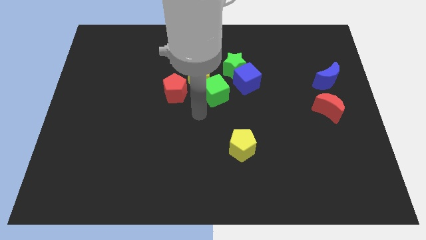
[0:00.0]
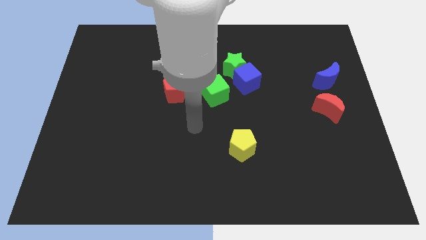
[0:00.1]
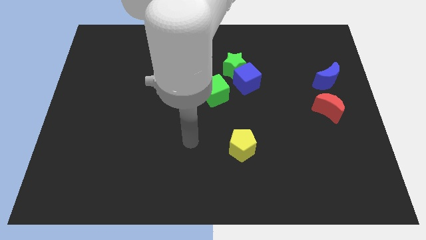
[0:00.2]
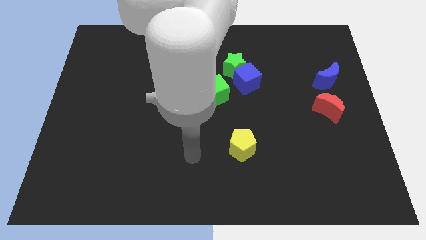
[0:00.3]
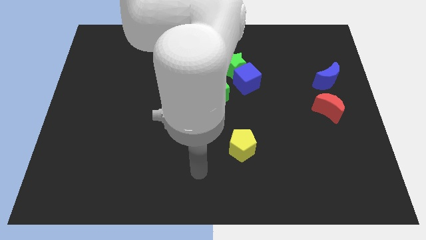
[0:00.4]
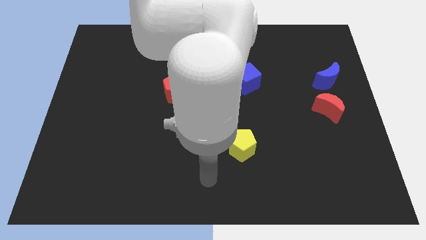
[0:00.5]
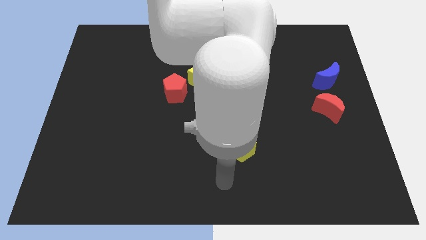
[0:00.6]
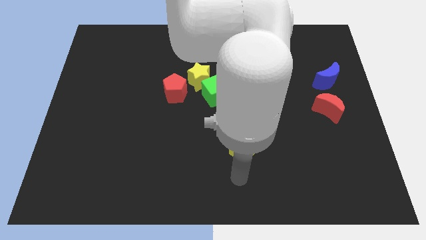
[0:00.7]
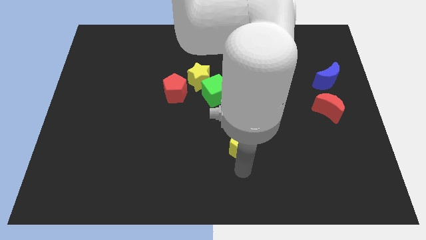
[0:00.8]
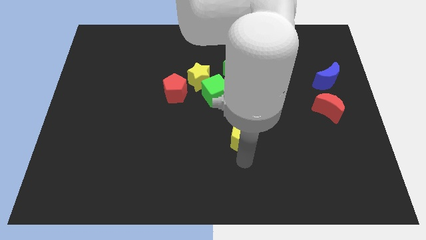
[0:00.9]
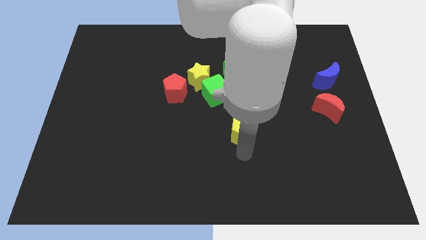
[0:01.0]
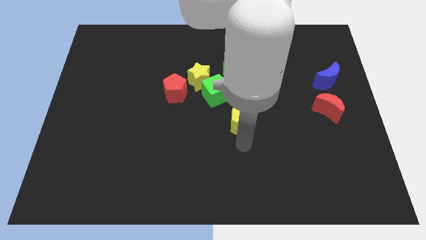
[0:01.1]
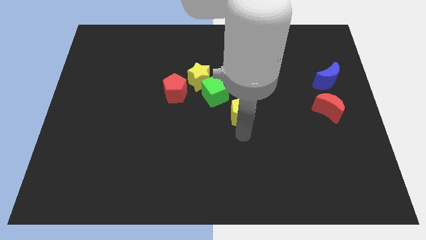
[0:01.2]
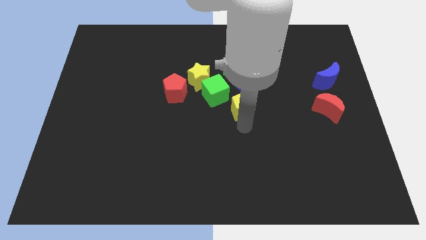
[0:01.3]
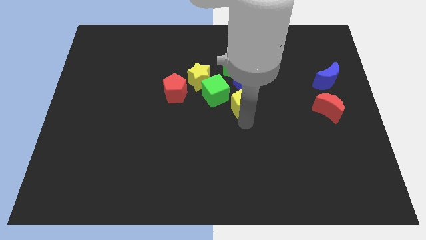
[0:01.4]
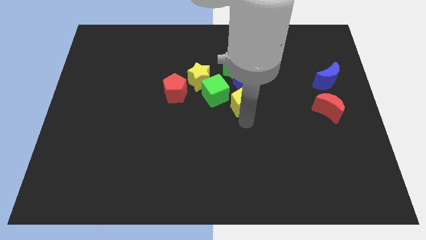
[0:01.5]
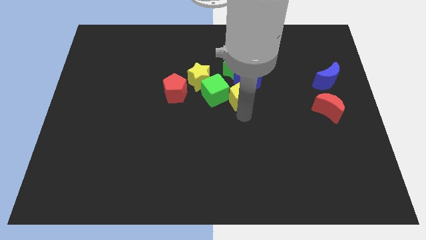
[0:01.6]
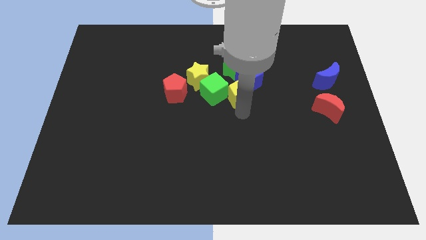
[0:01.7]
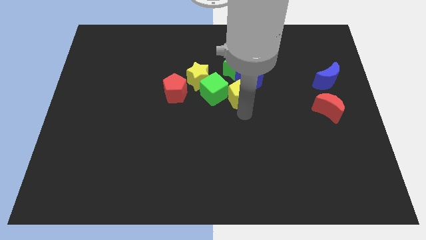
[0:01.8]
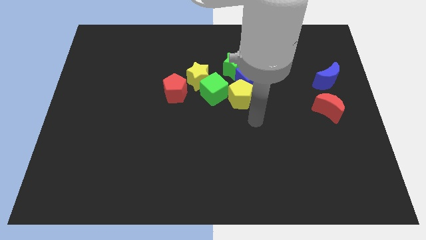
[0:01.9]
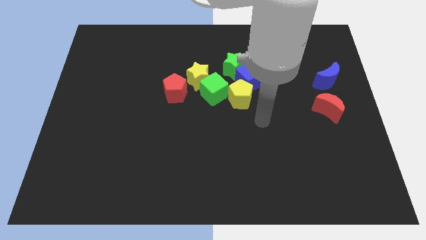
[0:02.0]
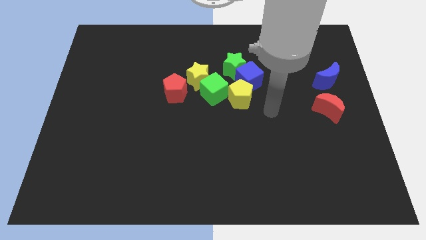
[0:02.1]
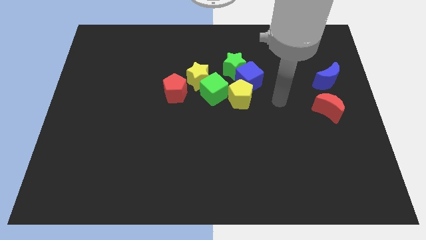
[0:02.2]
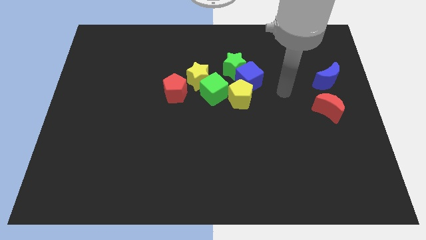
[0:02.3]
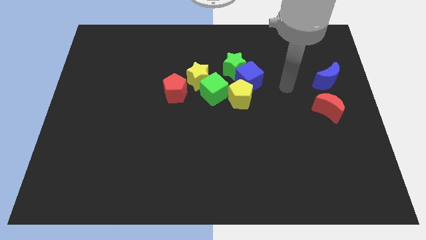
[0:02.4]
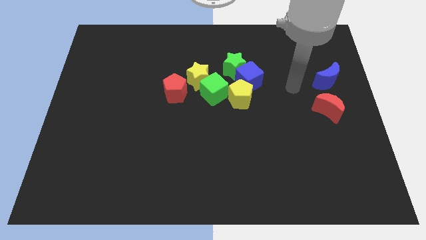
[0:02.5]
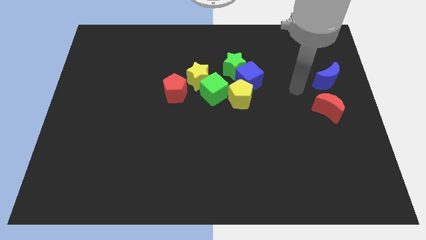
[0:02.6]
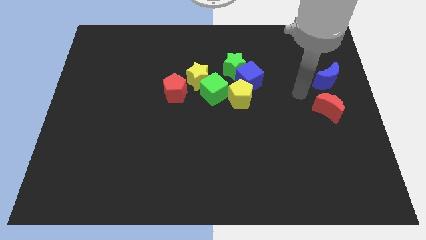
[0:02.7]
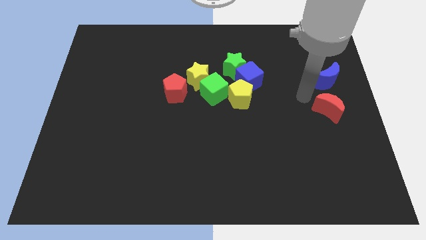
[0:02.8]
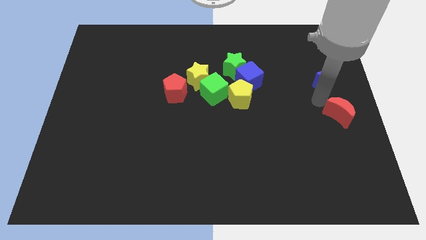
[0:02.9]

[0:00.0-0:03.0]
push the yellow pentagon clos e to the green cube

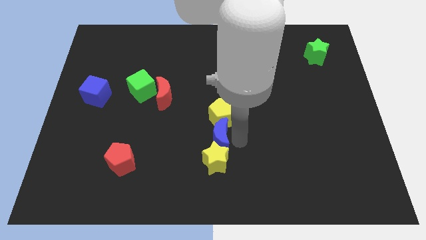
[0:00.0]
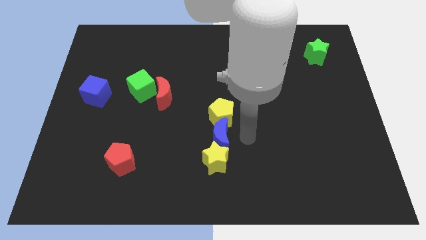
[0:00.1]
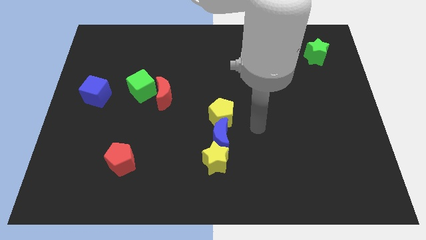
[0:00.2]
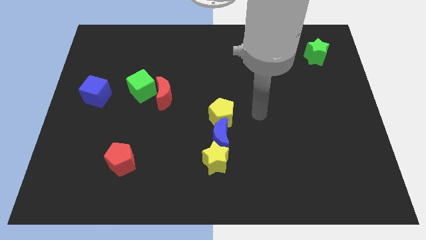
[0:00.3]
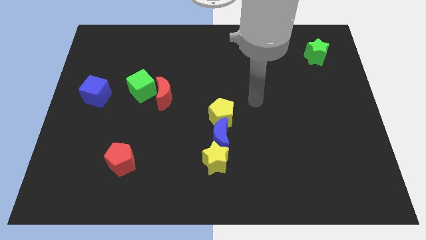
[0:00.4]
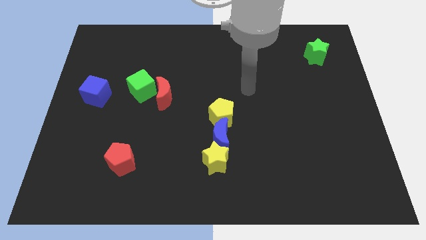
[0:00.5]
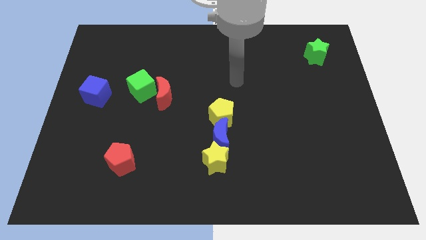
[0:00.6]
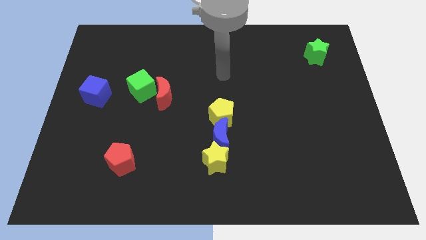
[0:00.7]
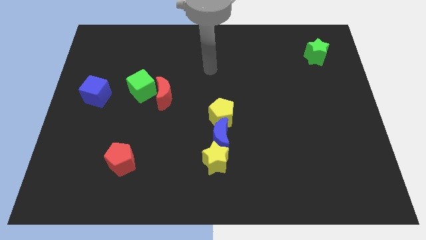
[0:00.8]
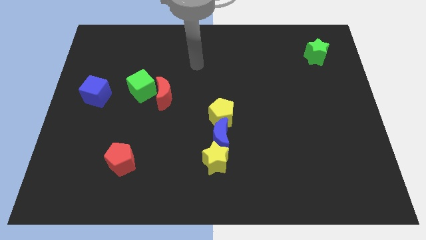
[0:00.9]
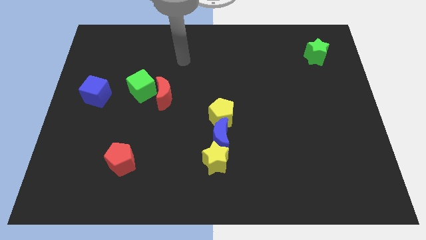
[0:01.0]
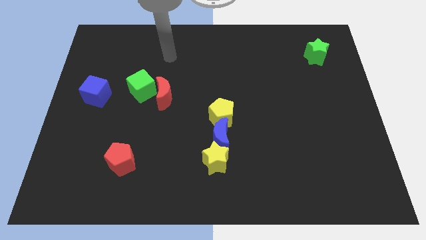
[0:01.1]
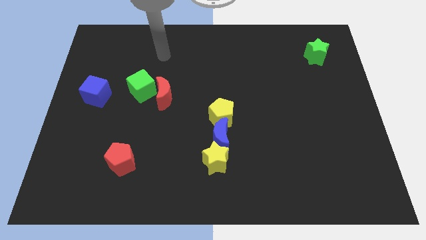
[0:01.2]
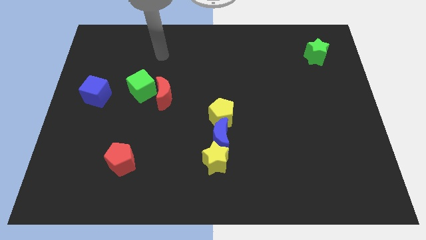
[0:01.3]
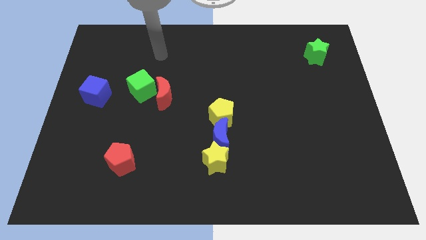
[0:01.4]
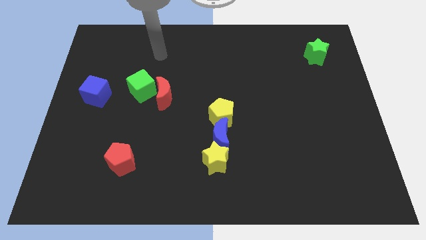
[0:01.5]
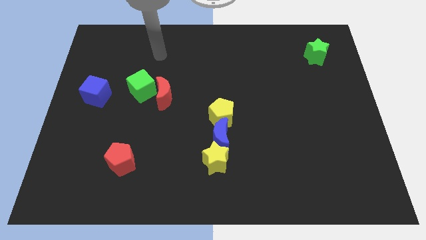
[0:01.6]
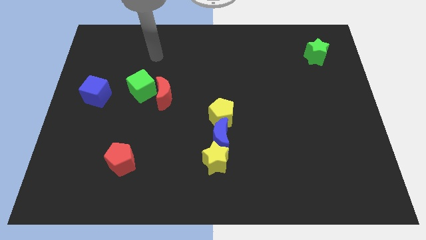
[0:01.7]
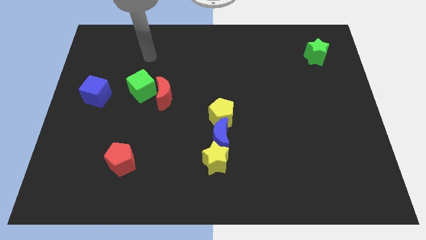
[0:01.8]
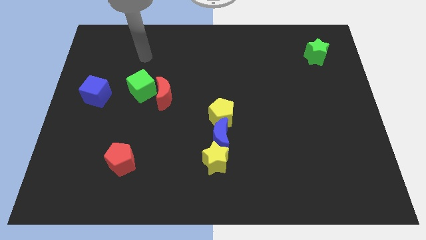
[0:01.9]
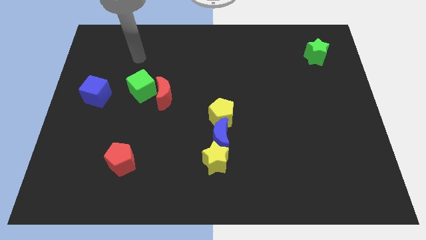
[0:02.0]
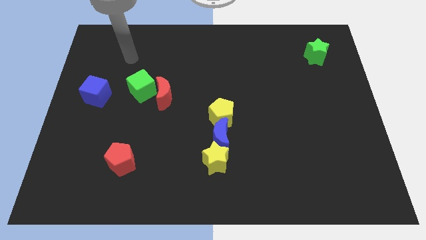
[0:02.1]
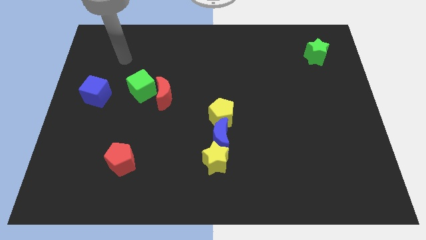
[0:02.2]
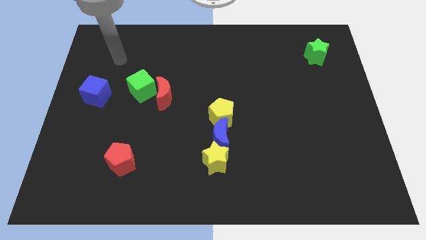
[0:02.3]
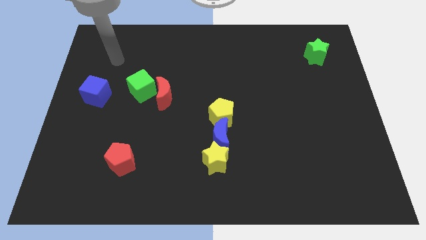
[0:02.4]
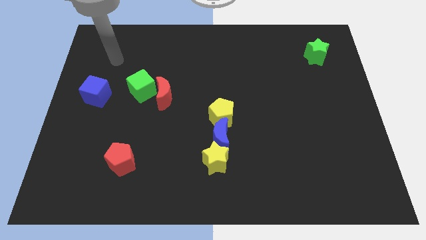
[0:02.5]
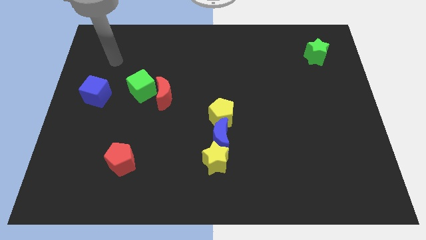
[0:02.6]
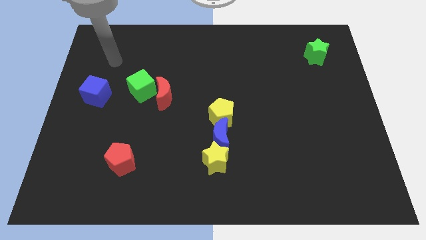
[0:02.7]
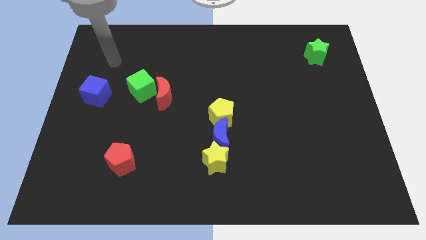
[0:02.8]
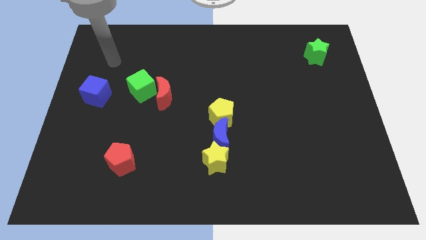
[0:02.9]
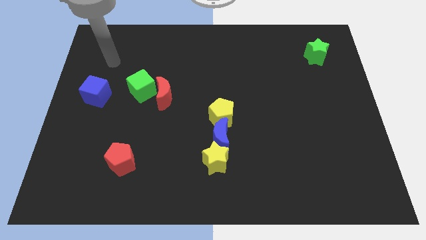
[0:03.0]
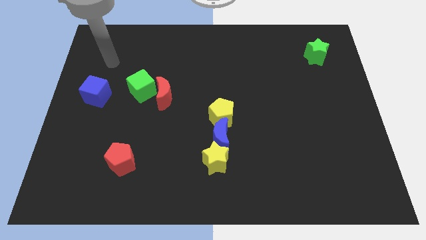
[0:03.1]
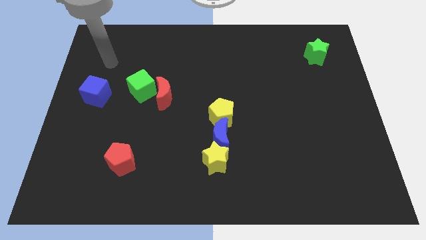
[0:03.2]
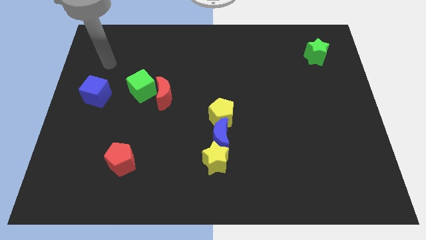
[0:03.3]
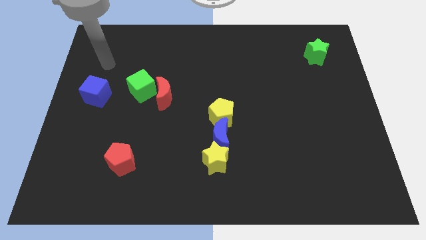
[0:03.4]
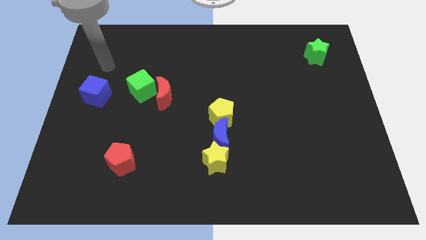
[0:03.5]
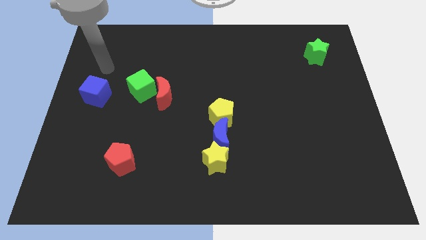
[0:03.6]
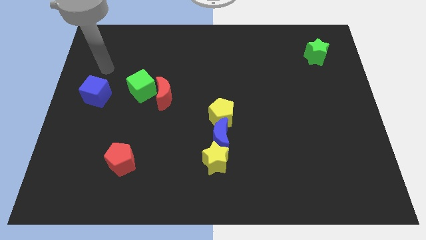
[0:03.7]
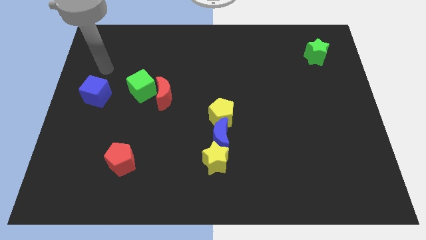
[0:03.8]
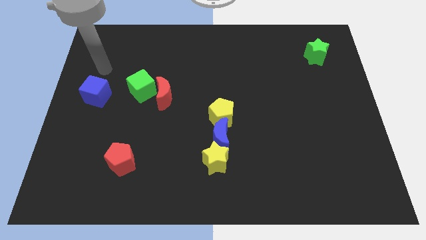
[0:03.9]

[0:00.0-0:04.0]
move your arm away from the blue crescent

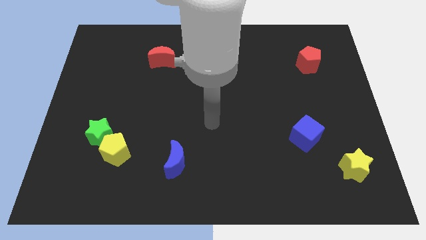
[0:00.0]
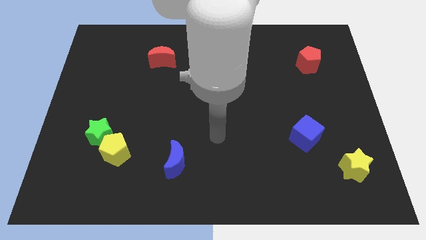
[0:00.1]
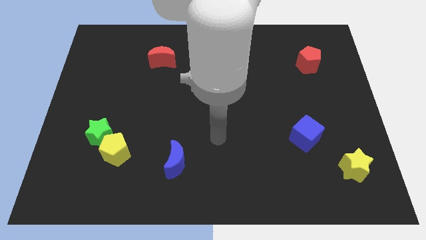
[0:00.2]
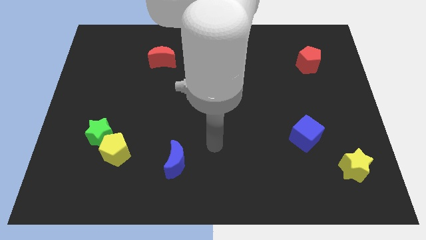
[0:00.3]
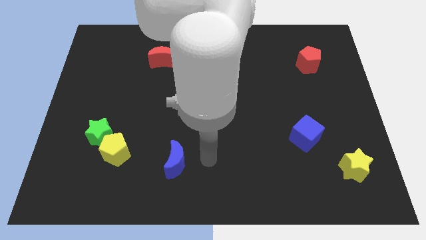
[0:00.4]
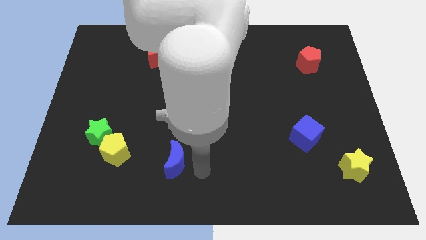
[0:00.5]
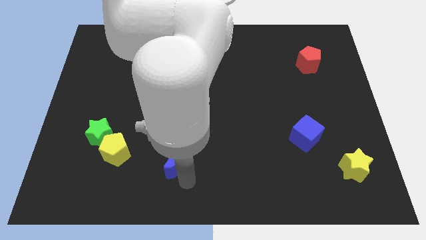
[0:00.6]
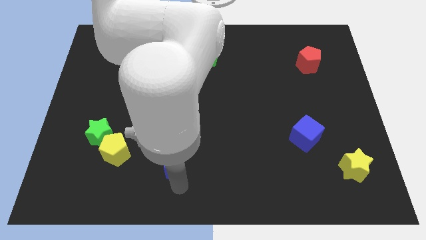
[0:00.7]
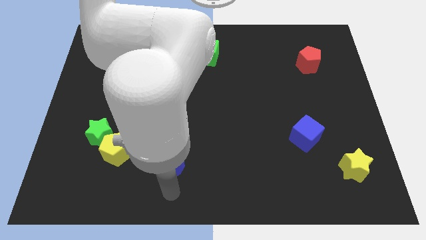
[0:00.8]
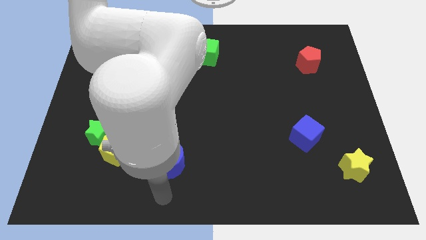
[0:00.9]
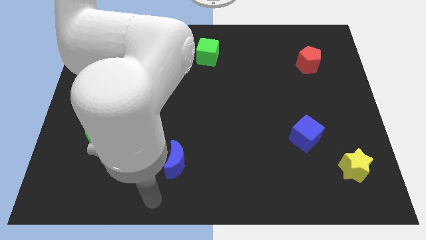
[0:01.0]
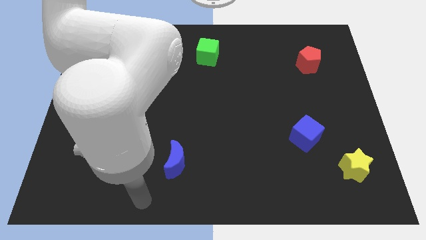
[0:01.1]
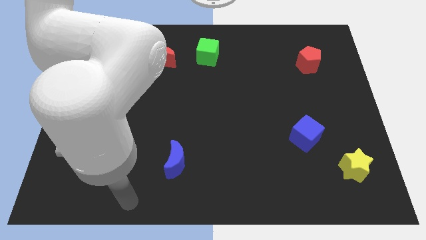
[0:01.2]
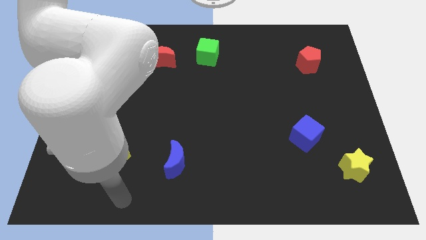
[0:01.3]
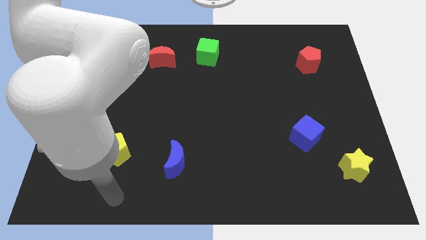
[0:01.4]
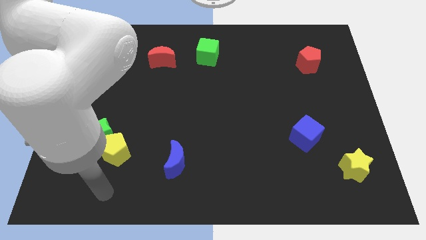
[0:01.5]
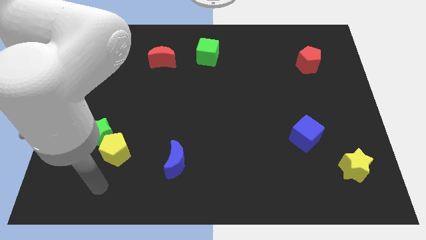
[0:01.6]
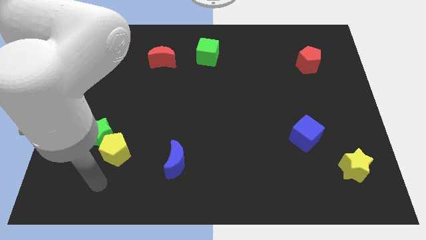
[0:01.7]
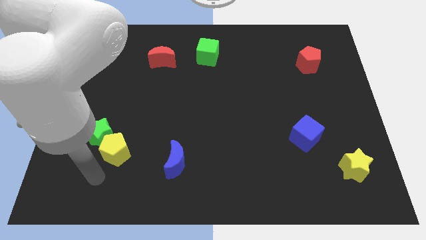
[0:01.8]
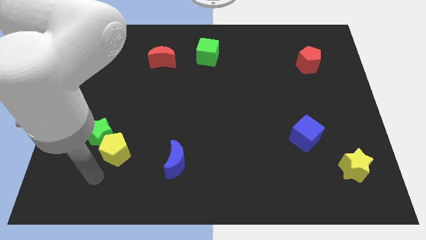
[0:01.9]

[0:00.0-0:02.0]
move your arm towards the yellow pentagon
